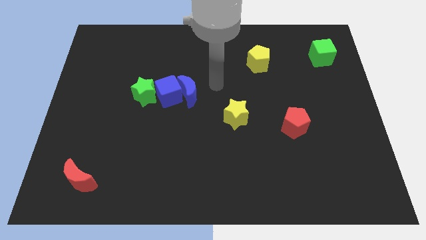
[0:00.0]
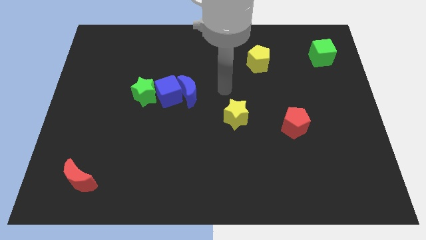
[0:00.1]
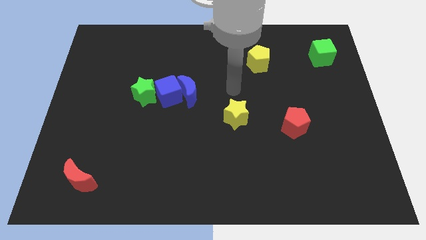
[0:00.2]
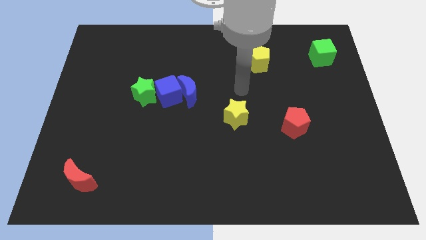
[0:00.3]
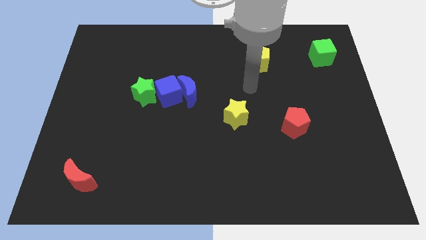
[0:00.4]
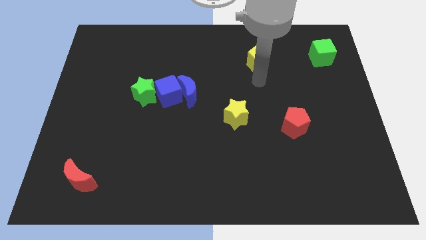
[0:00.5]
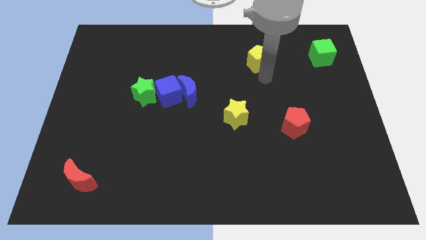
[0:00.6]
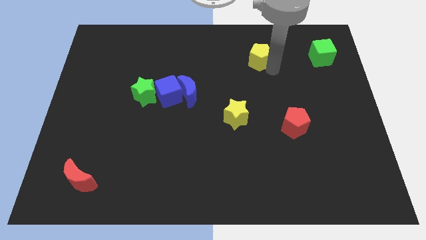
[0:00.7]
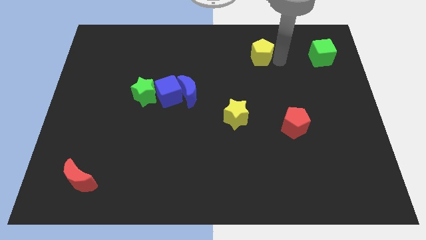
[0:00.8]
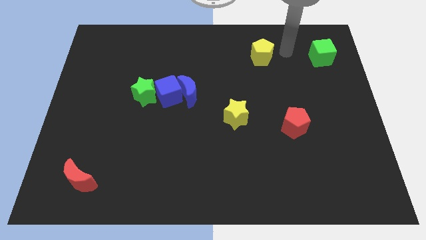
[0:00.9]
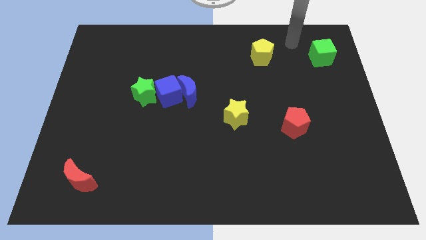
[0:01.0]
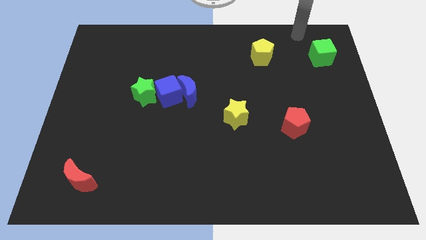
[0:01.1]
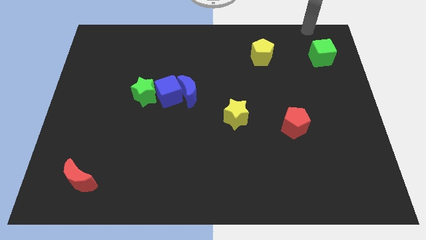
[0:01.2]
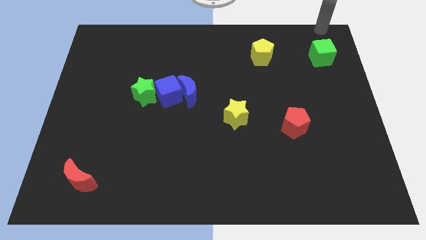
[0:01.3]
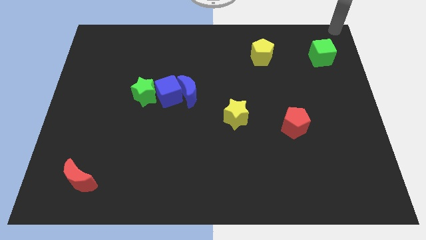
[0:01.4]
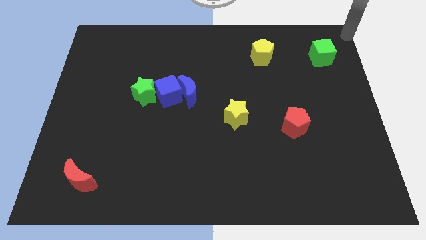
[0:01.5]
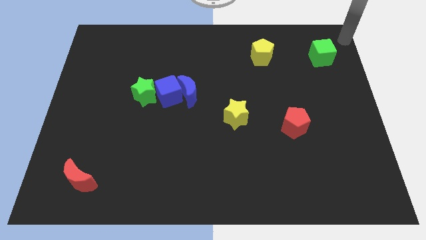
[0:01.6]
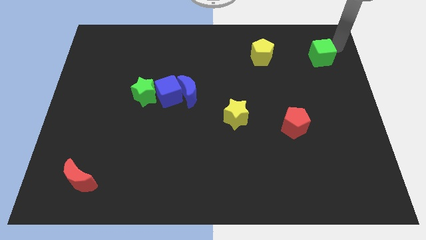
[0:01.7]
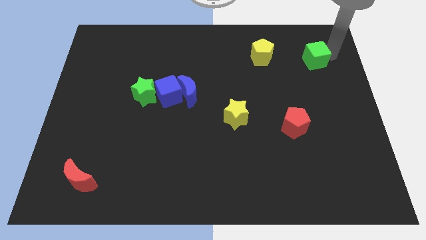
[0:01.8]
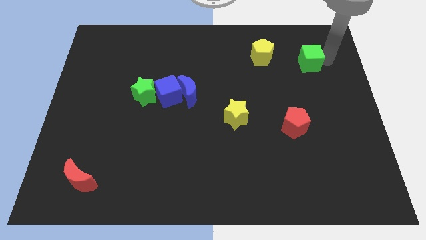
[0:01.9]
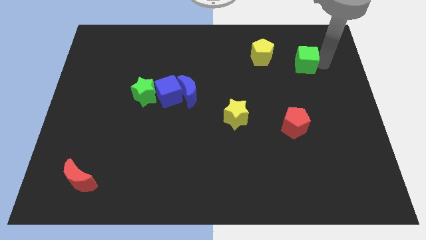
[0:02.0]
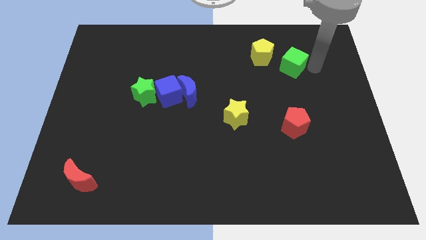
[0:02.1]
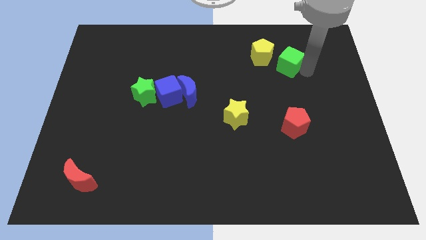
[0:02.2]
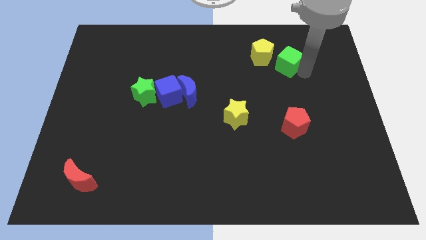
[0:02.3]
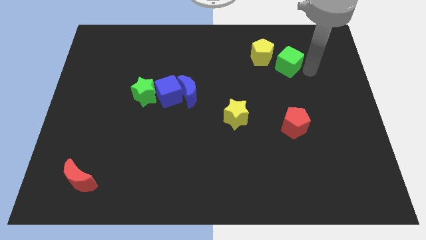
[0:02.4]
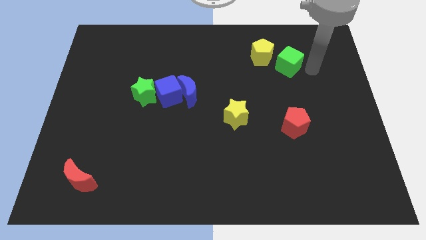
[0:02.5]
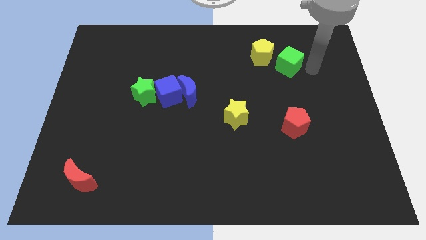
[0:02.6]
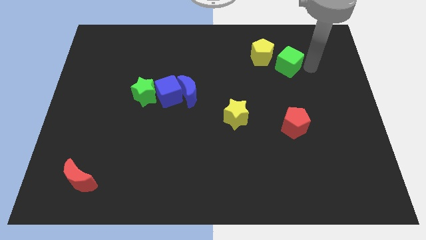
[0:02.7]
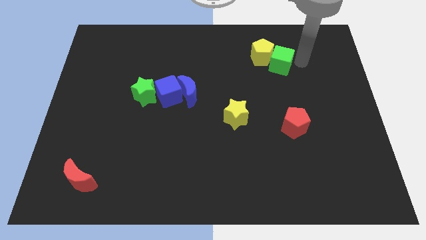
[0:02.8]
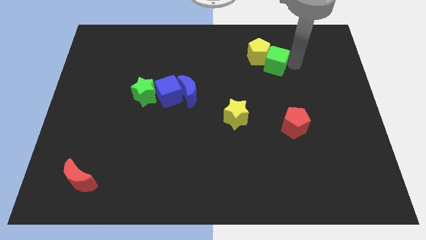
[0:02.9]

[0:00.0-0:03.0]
push the green cube into the yellow pentagon

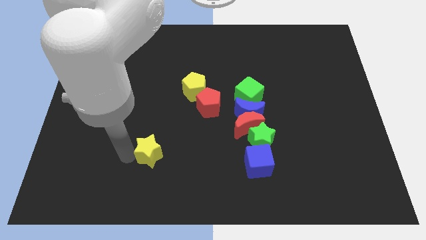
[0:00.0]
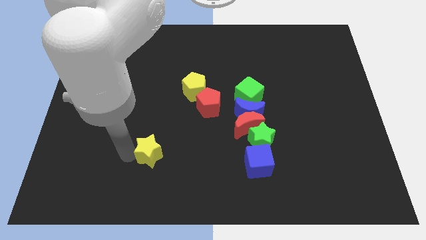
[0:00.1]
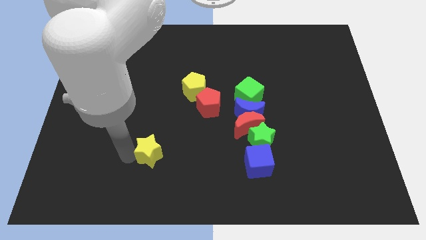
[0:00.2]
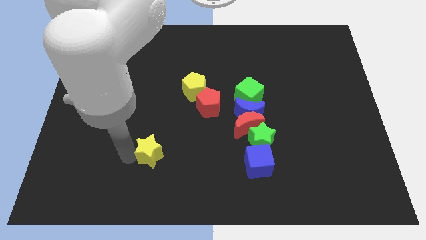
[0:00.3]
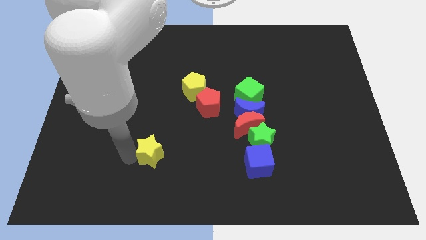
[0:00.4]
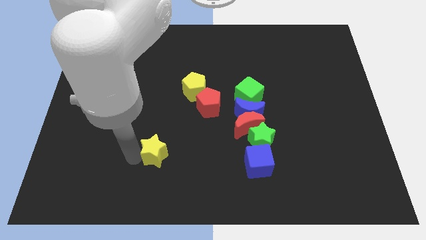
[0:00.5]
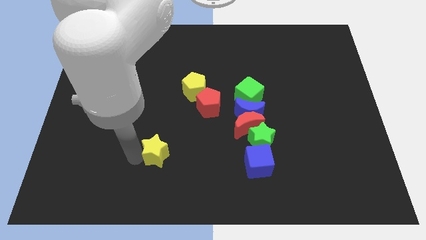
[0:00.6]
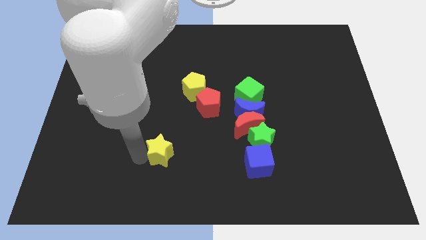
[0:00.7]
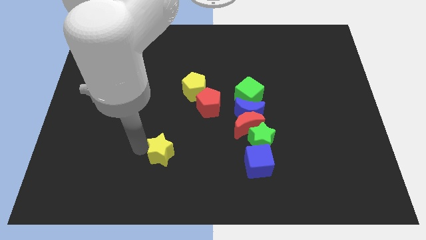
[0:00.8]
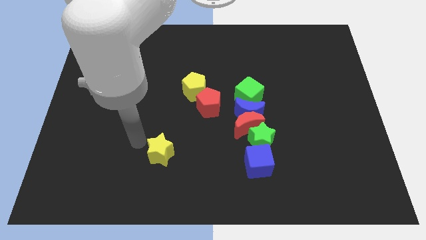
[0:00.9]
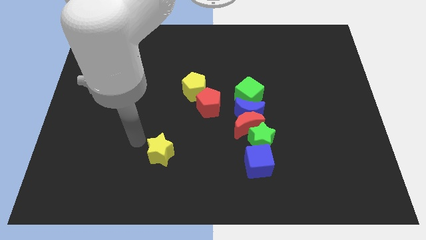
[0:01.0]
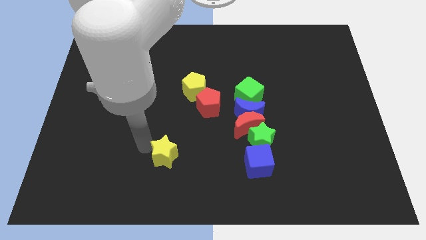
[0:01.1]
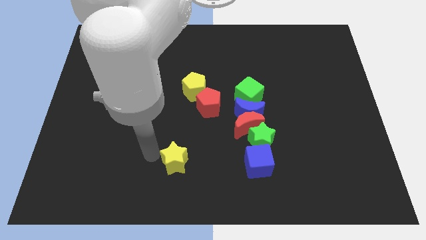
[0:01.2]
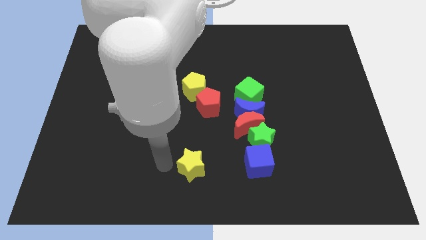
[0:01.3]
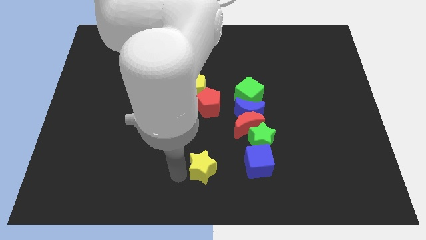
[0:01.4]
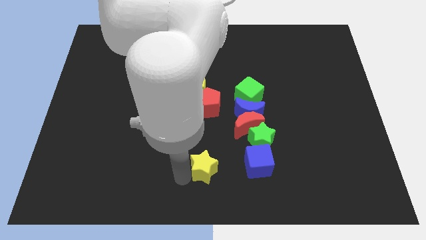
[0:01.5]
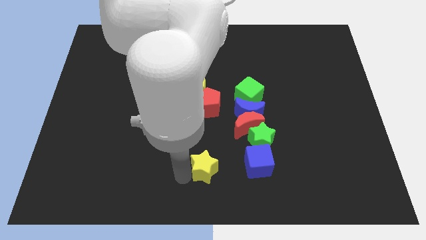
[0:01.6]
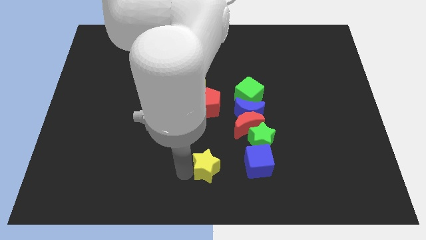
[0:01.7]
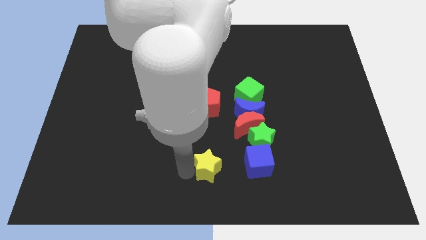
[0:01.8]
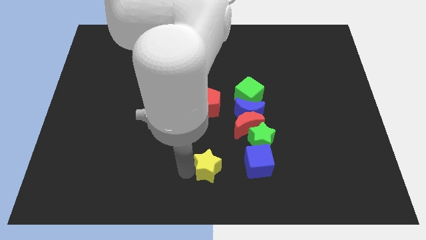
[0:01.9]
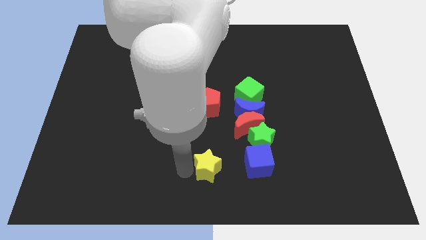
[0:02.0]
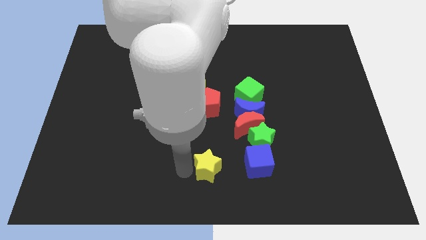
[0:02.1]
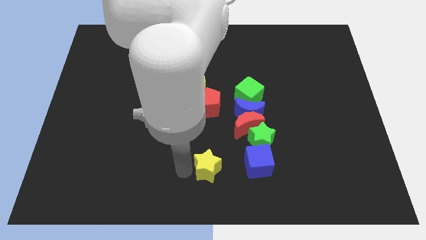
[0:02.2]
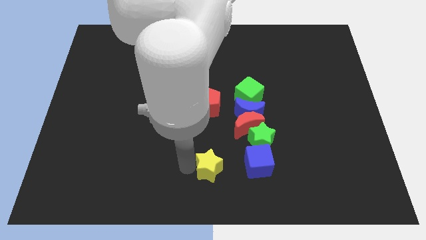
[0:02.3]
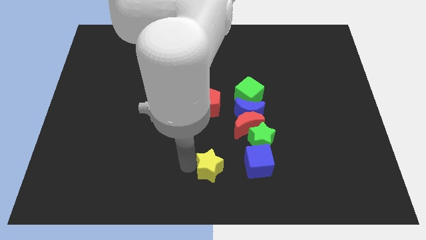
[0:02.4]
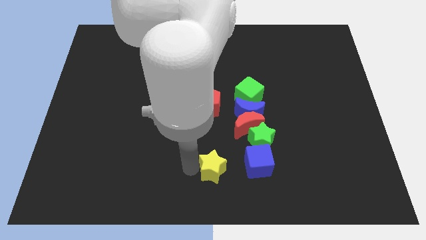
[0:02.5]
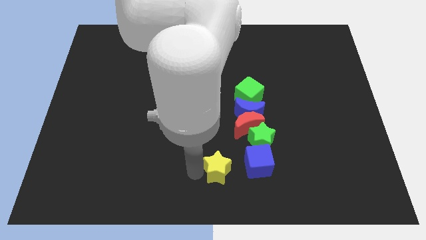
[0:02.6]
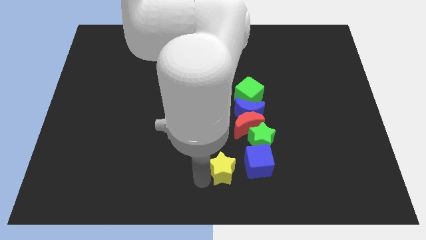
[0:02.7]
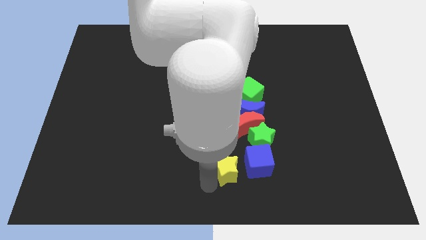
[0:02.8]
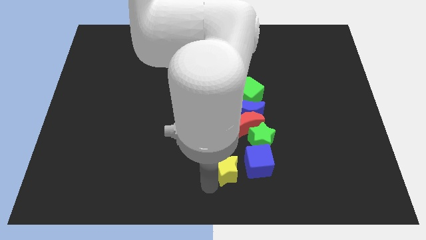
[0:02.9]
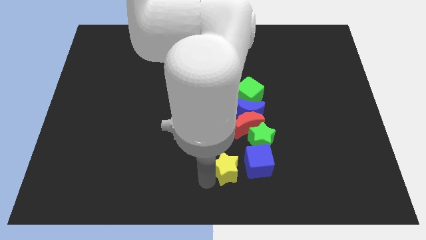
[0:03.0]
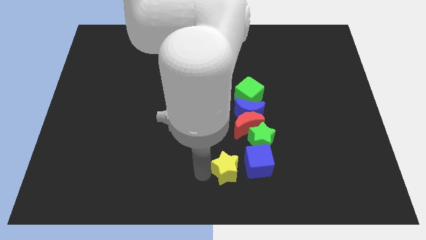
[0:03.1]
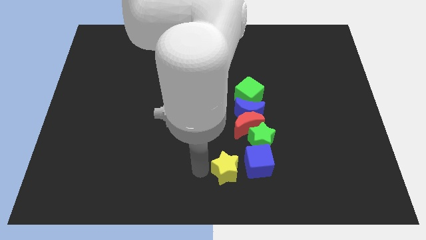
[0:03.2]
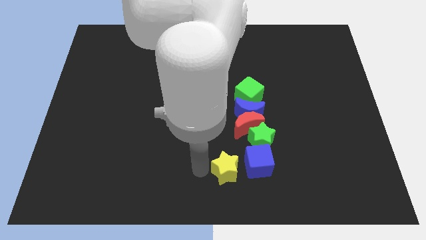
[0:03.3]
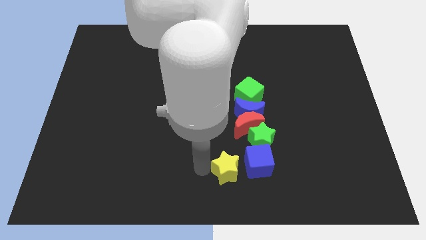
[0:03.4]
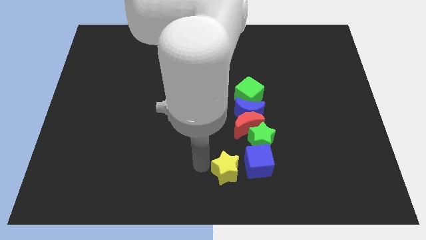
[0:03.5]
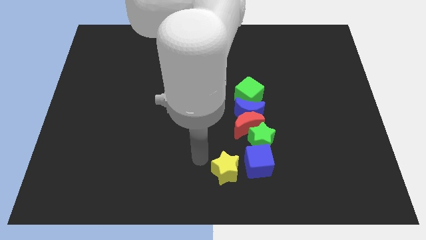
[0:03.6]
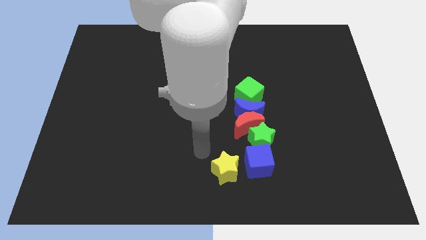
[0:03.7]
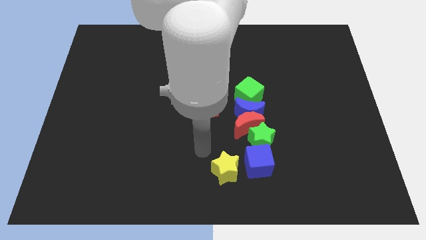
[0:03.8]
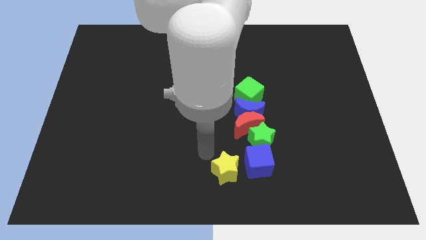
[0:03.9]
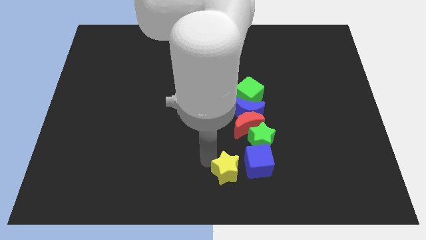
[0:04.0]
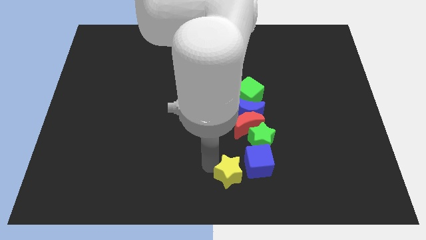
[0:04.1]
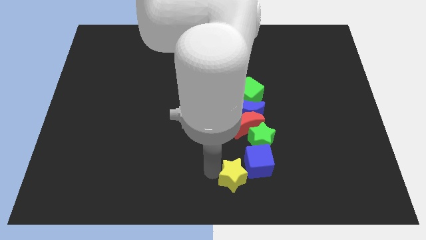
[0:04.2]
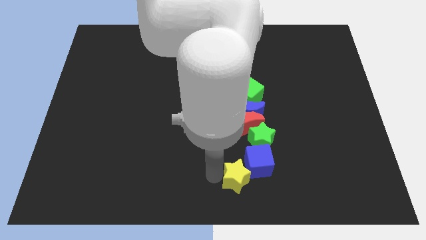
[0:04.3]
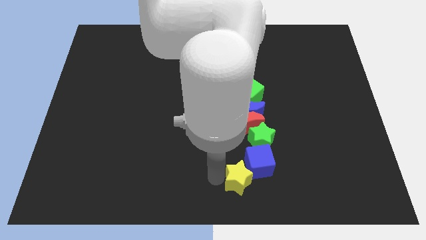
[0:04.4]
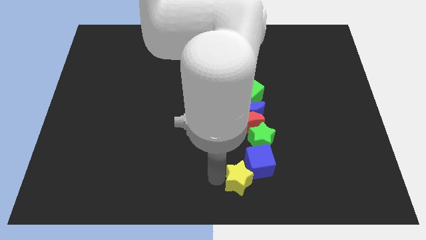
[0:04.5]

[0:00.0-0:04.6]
push the yellow star close to the blue cube

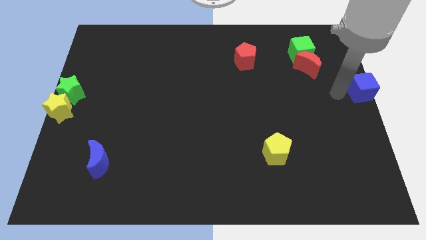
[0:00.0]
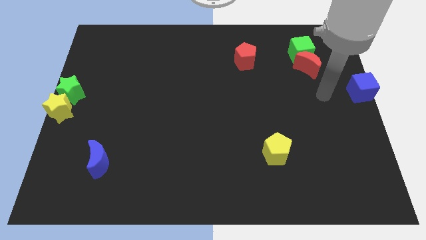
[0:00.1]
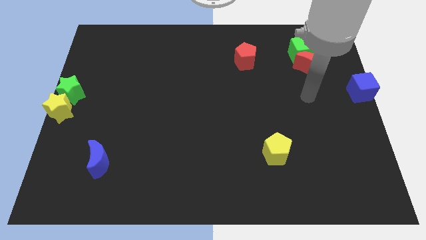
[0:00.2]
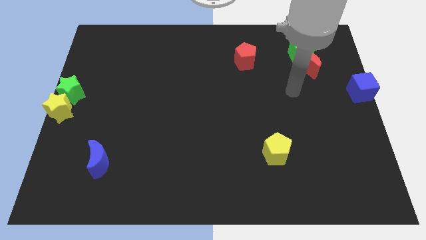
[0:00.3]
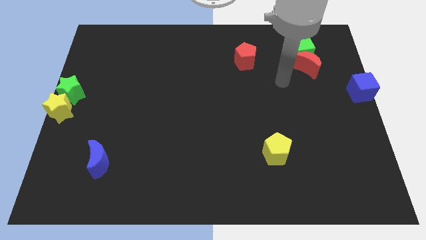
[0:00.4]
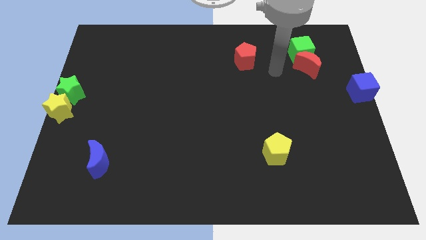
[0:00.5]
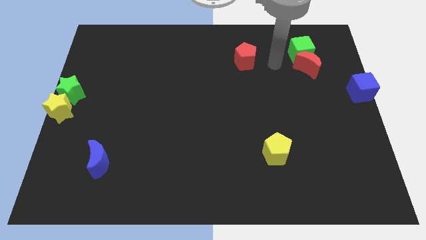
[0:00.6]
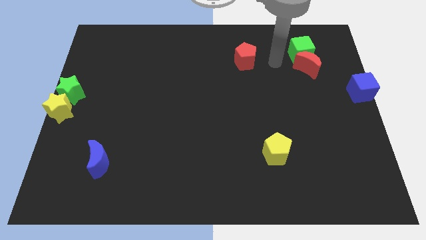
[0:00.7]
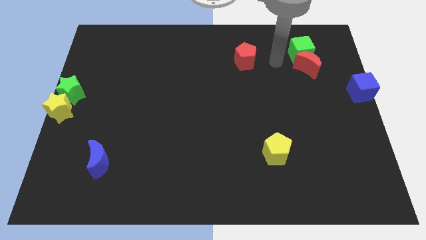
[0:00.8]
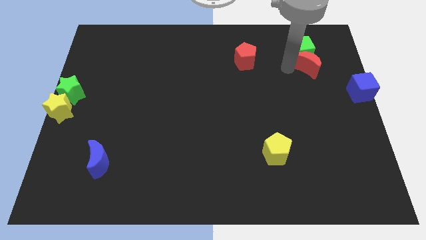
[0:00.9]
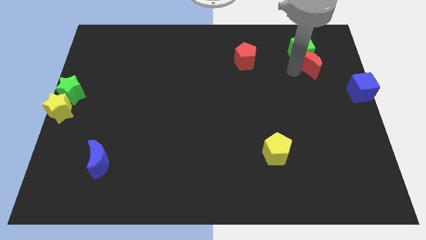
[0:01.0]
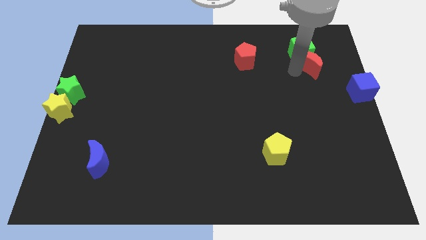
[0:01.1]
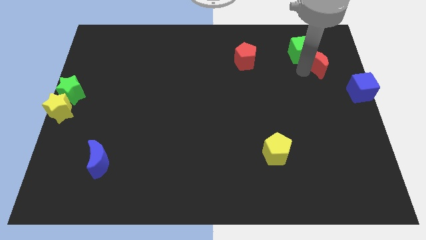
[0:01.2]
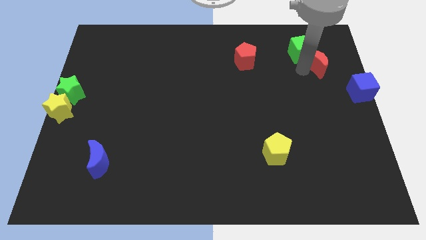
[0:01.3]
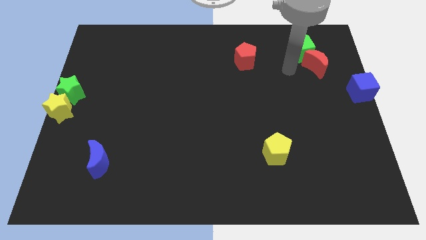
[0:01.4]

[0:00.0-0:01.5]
slightly push the red crescent to the right side
